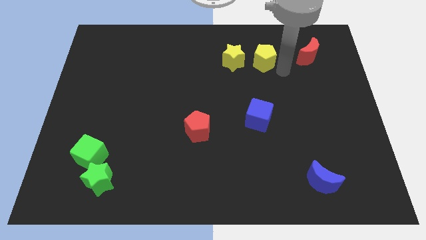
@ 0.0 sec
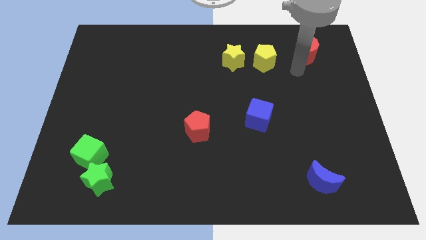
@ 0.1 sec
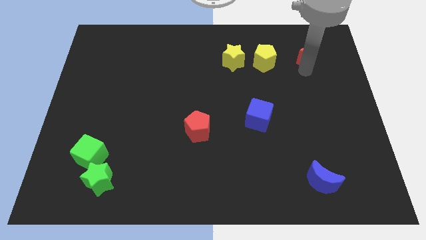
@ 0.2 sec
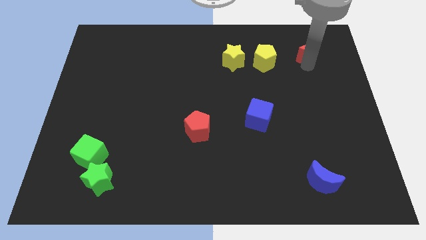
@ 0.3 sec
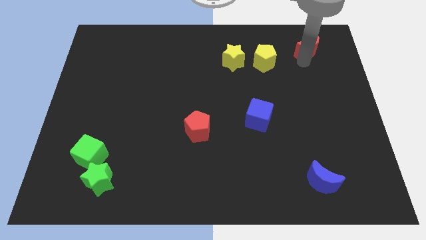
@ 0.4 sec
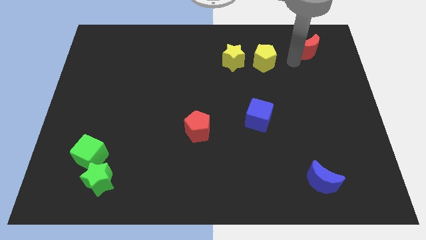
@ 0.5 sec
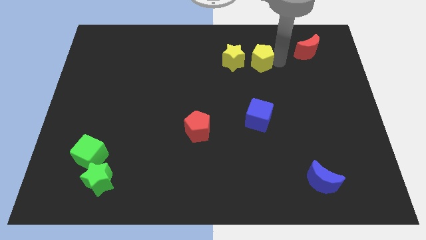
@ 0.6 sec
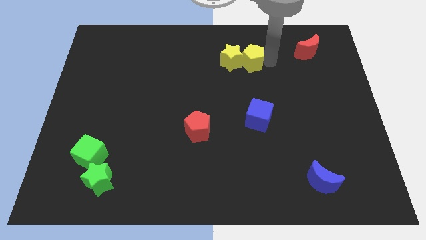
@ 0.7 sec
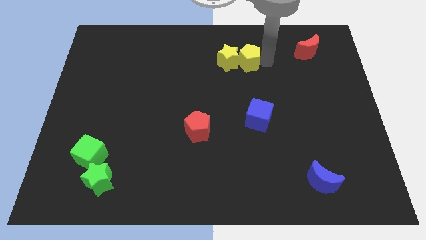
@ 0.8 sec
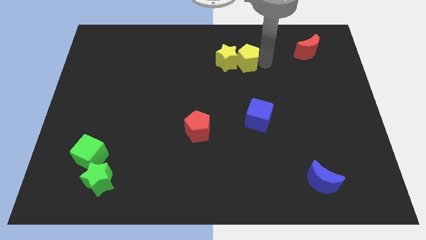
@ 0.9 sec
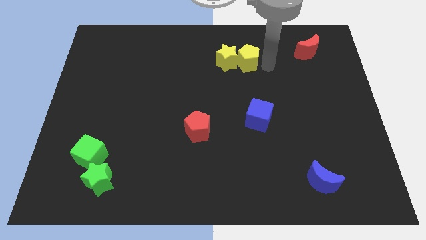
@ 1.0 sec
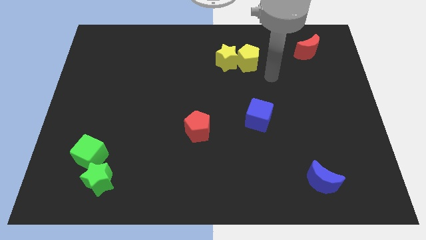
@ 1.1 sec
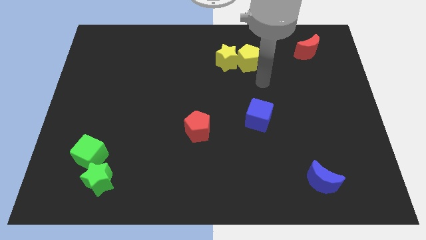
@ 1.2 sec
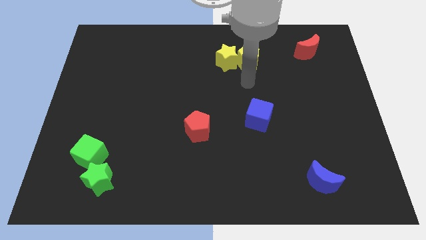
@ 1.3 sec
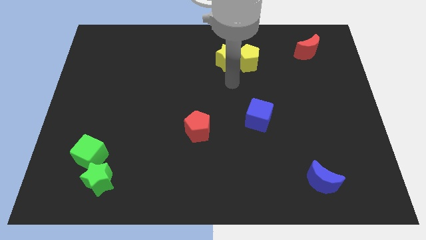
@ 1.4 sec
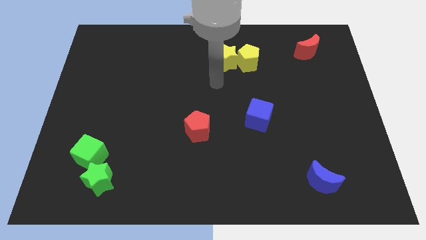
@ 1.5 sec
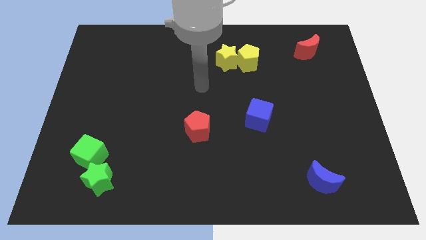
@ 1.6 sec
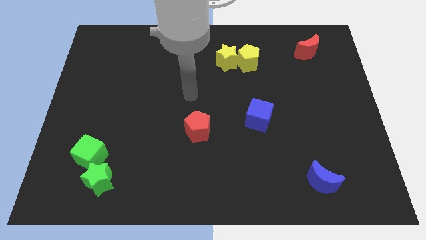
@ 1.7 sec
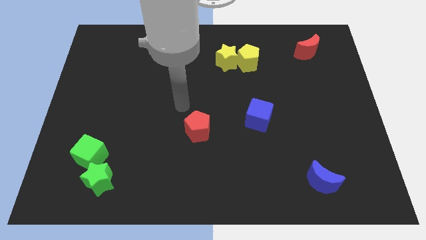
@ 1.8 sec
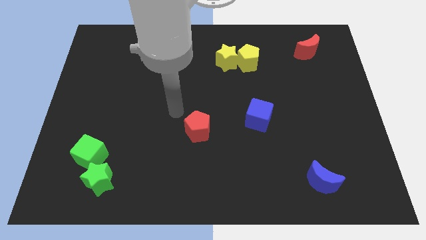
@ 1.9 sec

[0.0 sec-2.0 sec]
move the yellow pentagon into the yellow star

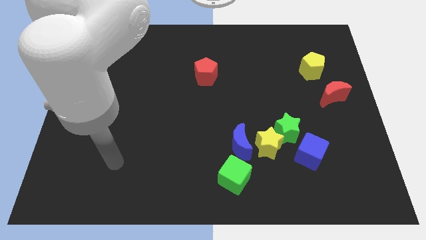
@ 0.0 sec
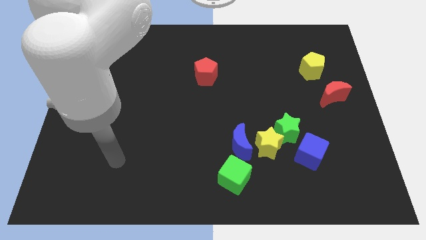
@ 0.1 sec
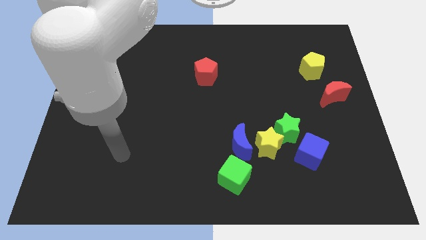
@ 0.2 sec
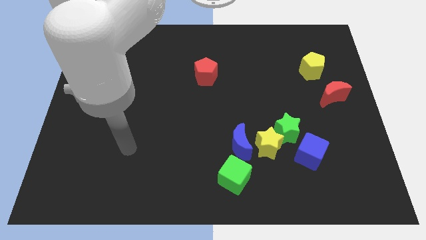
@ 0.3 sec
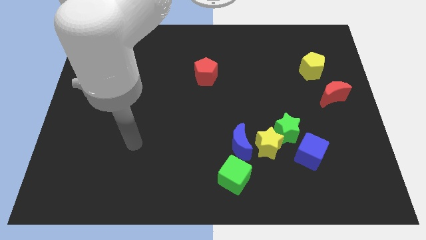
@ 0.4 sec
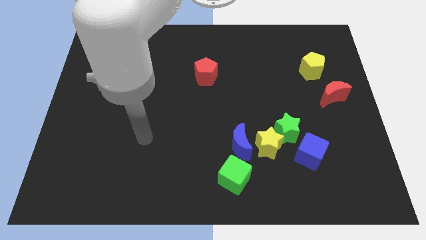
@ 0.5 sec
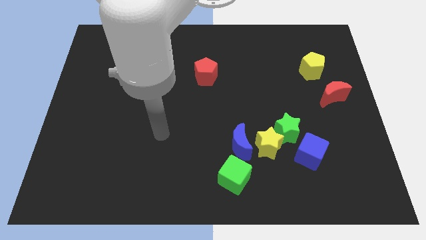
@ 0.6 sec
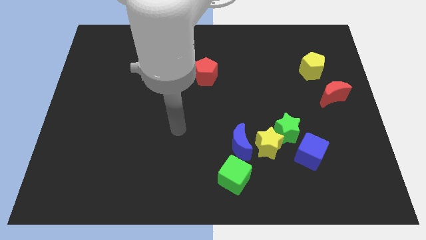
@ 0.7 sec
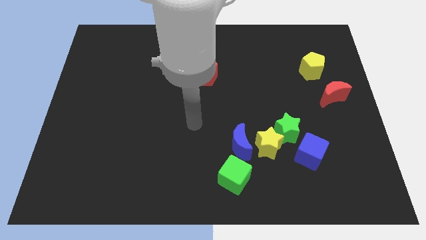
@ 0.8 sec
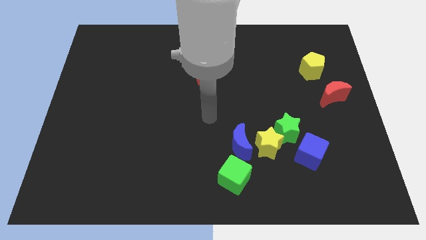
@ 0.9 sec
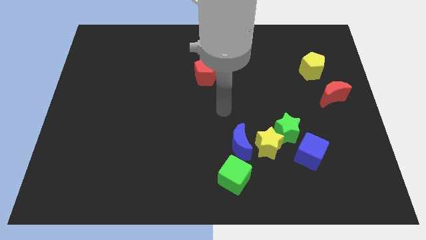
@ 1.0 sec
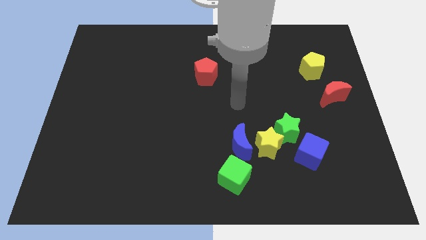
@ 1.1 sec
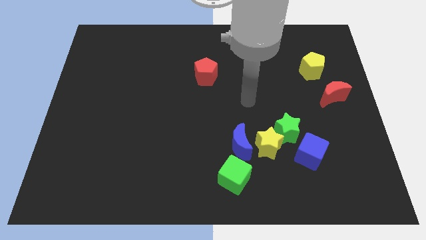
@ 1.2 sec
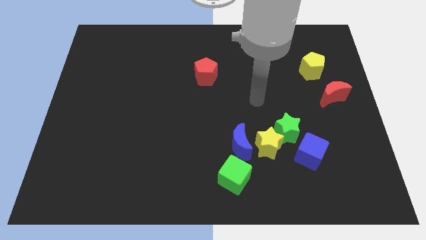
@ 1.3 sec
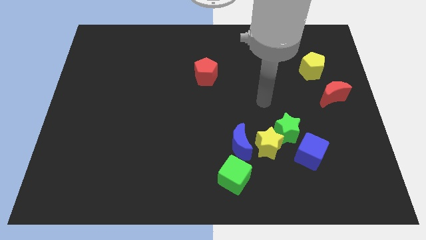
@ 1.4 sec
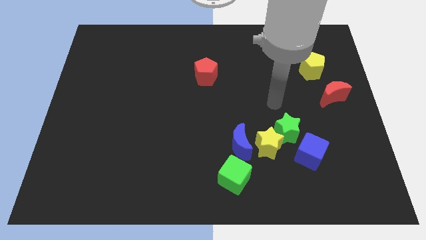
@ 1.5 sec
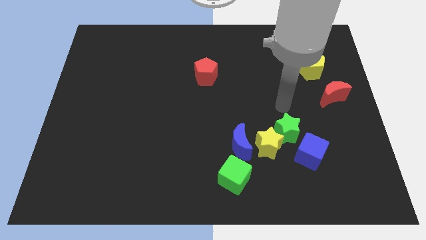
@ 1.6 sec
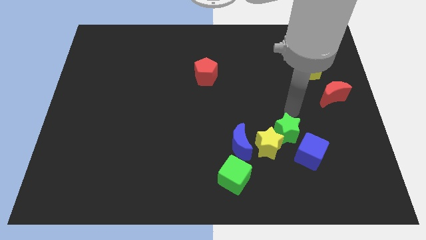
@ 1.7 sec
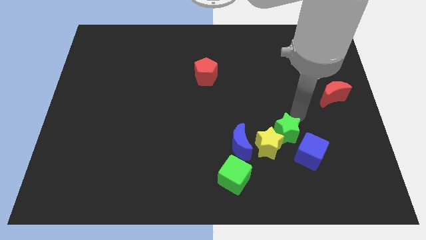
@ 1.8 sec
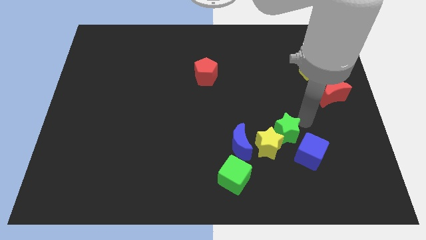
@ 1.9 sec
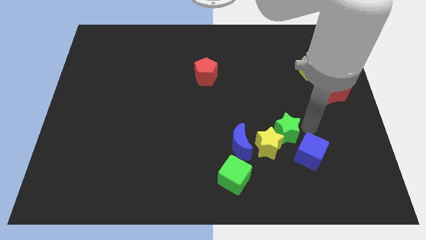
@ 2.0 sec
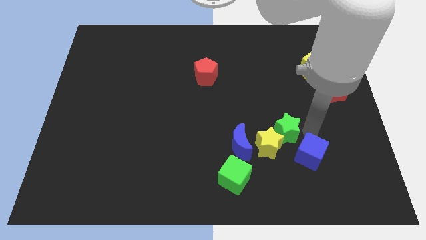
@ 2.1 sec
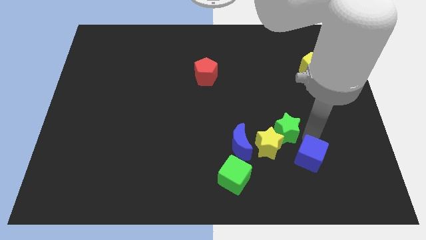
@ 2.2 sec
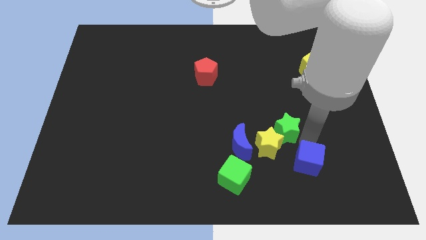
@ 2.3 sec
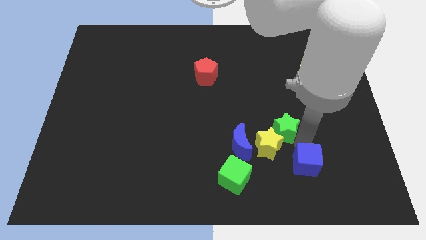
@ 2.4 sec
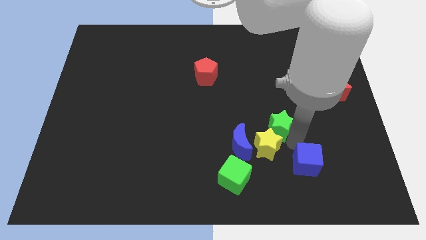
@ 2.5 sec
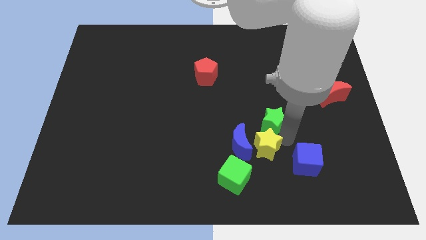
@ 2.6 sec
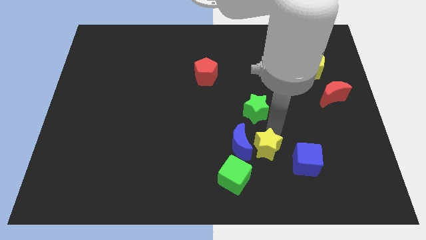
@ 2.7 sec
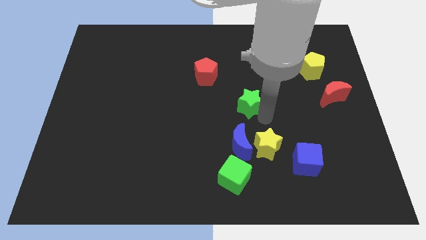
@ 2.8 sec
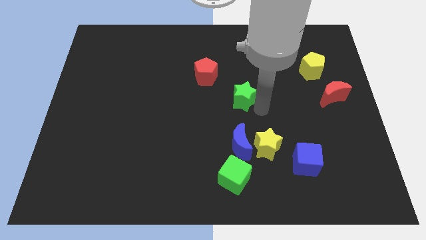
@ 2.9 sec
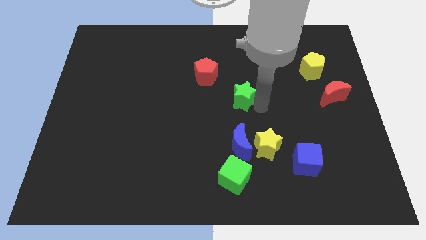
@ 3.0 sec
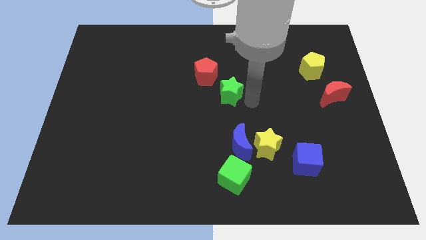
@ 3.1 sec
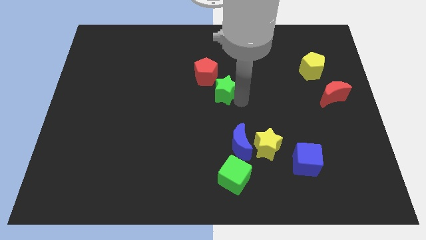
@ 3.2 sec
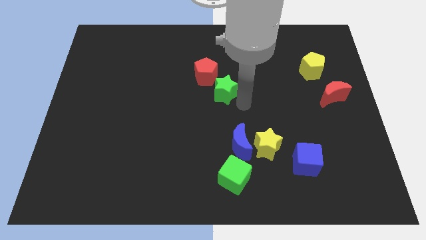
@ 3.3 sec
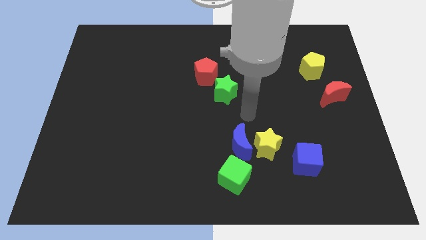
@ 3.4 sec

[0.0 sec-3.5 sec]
push the green star towards the red pentagon

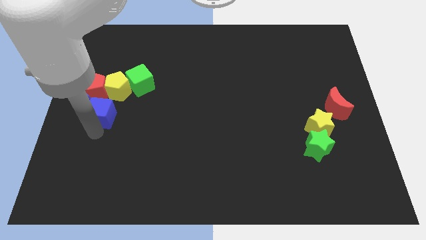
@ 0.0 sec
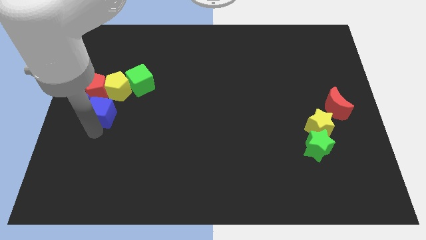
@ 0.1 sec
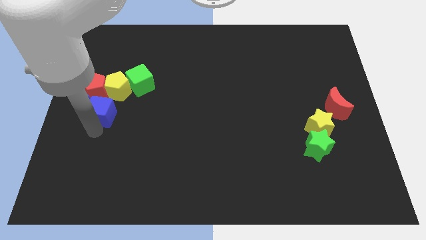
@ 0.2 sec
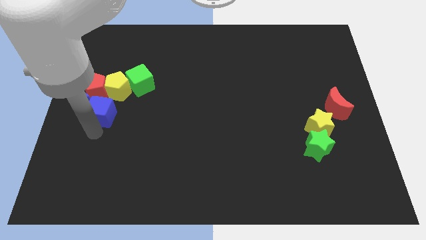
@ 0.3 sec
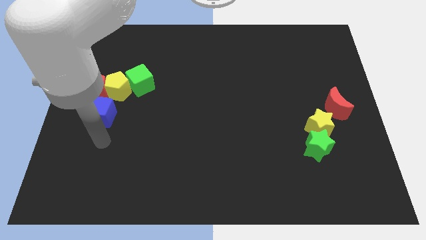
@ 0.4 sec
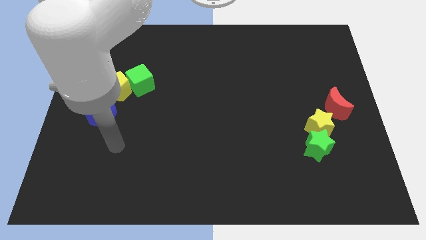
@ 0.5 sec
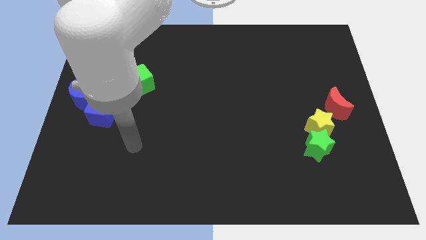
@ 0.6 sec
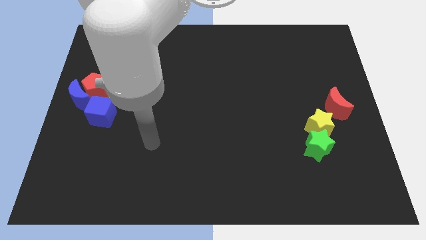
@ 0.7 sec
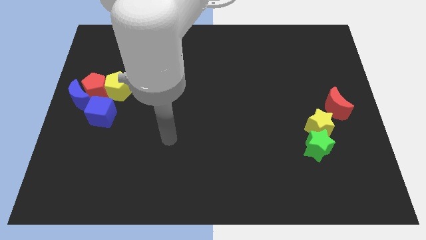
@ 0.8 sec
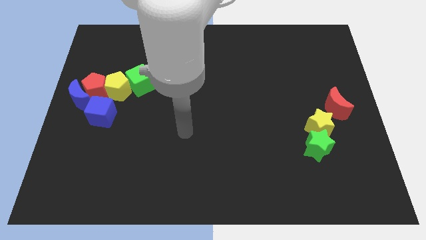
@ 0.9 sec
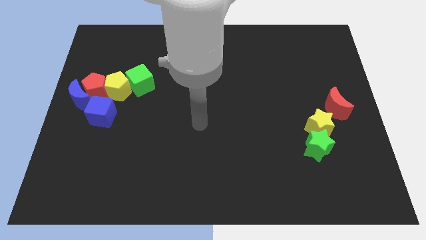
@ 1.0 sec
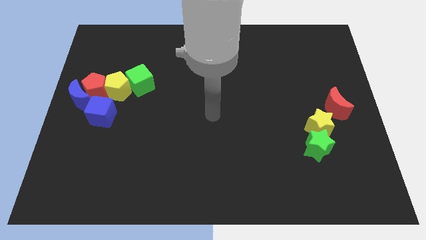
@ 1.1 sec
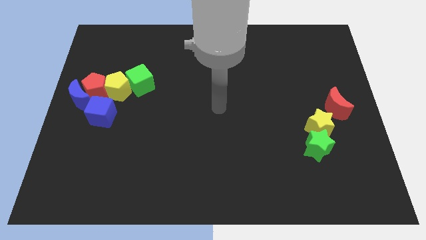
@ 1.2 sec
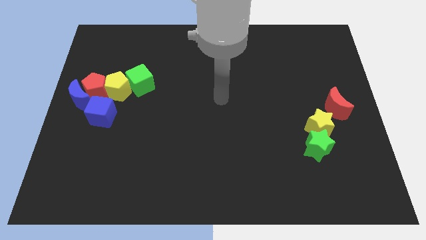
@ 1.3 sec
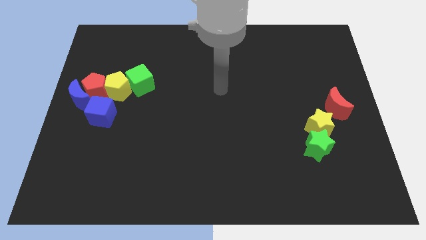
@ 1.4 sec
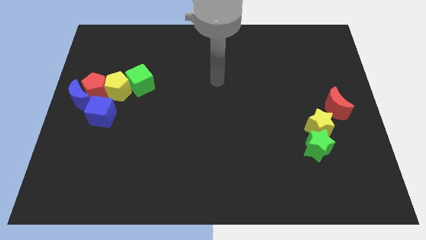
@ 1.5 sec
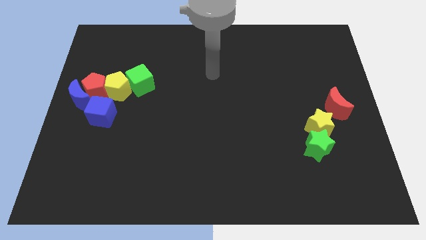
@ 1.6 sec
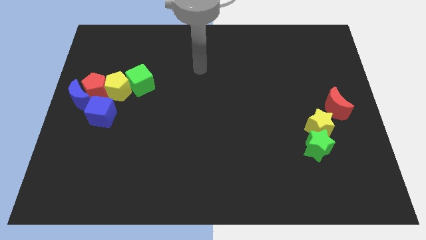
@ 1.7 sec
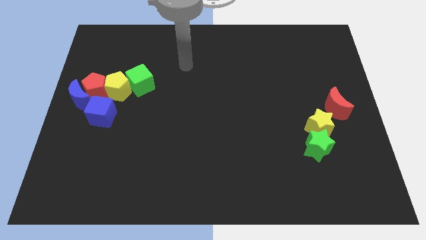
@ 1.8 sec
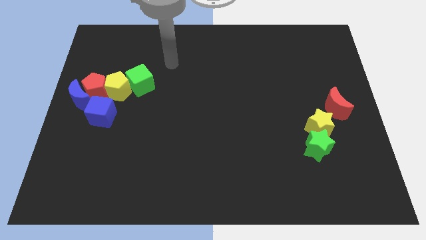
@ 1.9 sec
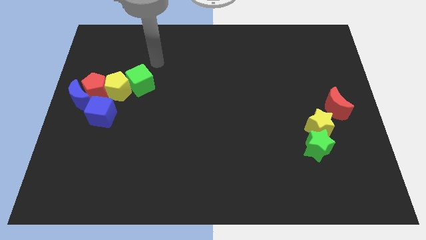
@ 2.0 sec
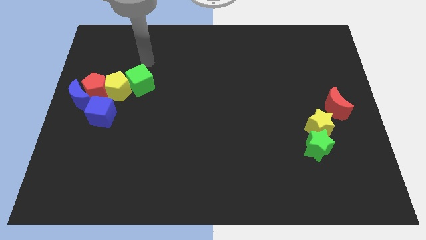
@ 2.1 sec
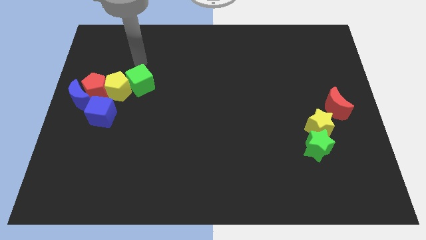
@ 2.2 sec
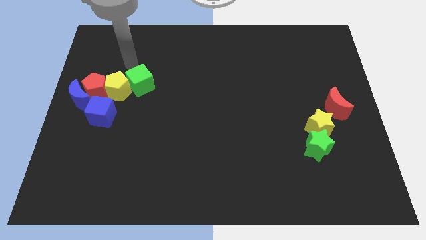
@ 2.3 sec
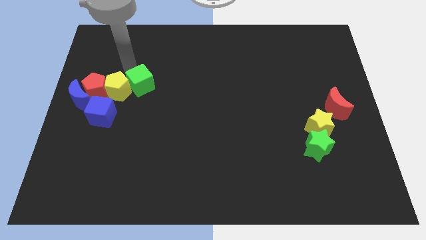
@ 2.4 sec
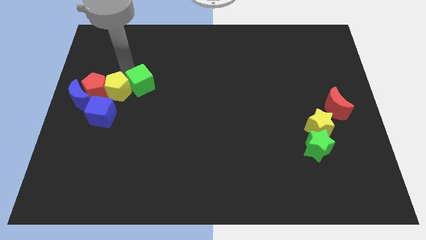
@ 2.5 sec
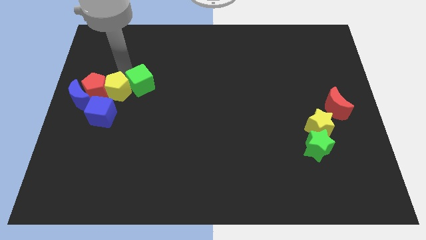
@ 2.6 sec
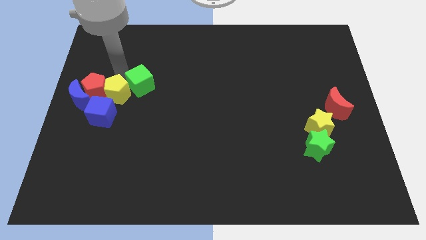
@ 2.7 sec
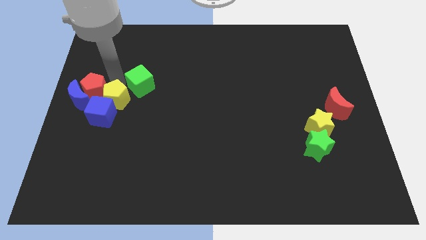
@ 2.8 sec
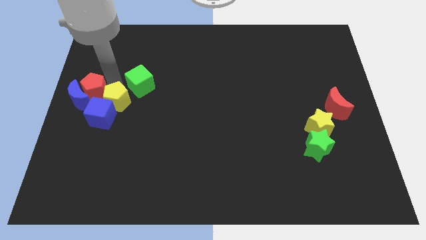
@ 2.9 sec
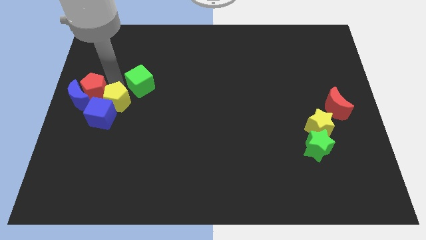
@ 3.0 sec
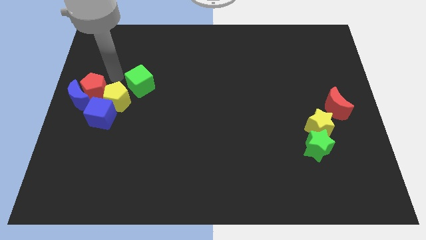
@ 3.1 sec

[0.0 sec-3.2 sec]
push the yellow pentagon into the top side of the blue cube

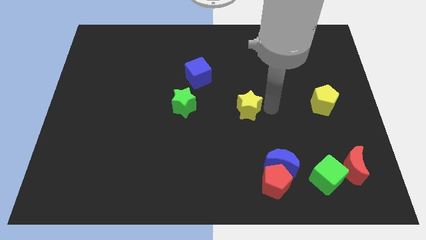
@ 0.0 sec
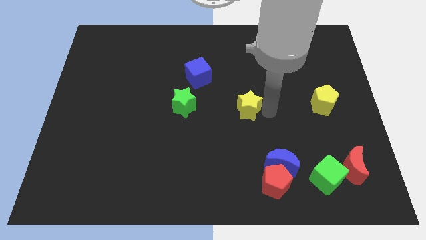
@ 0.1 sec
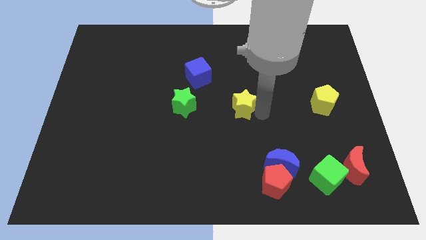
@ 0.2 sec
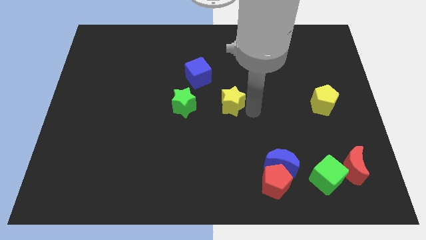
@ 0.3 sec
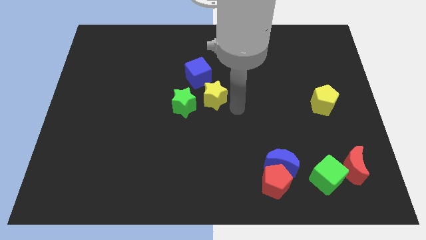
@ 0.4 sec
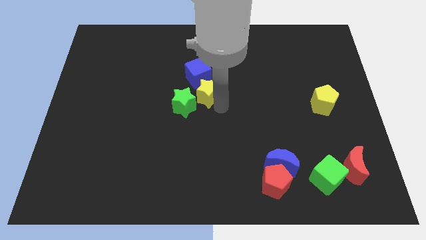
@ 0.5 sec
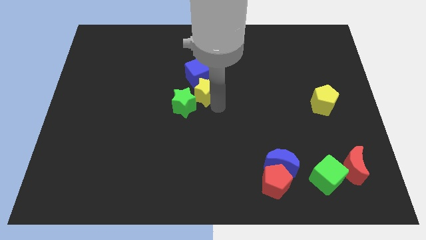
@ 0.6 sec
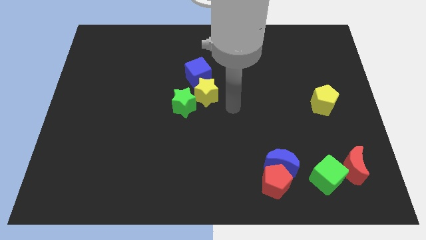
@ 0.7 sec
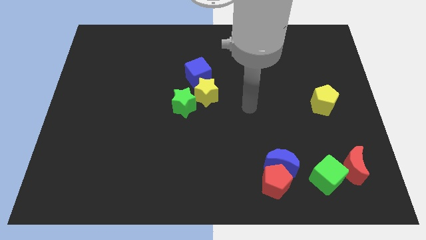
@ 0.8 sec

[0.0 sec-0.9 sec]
push the yellow star into the blue cube
